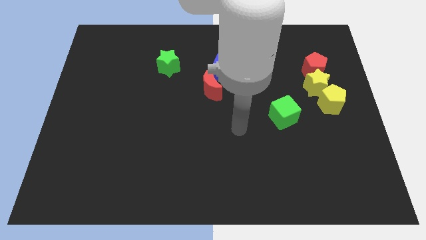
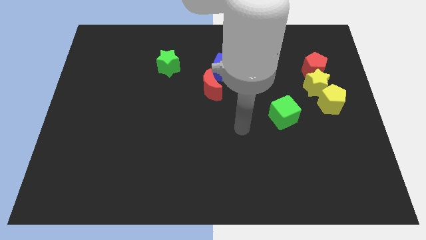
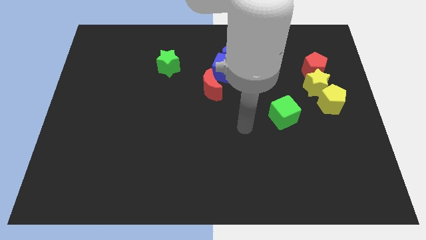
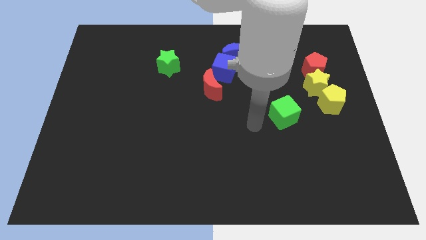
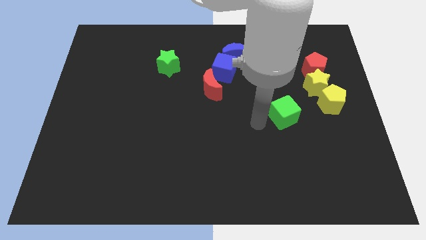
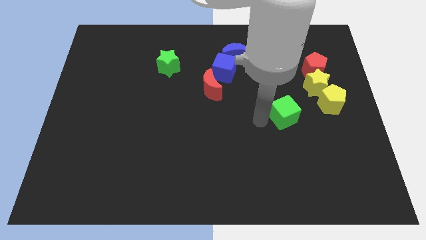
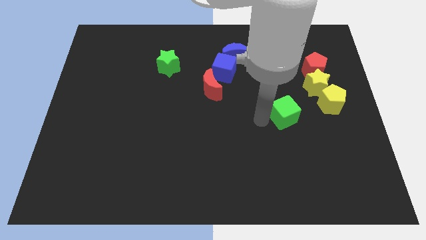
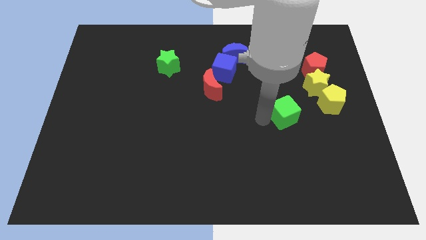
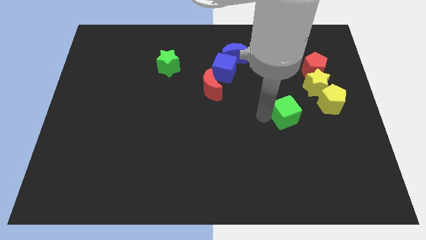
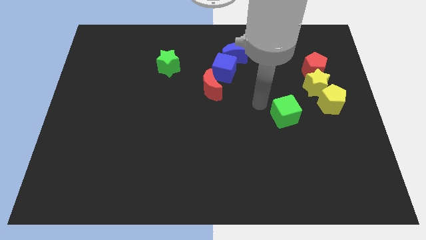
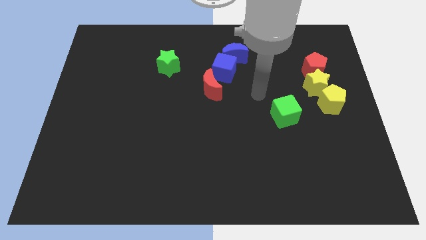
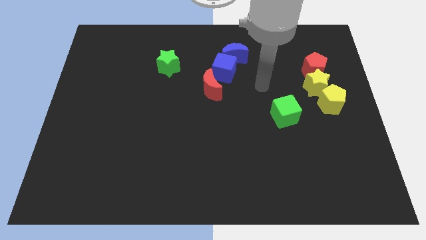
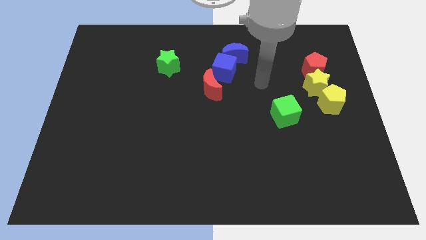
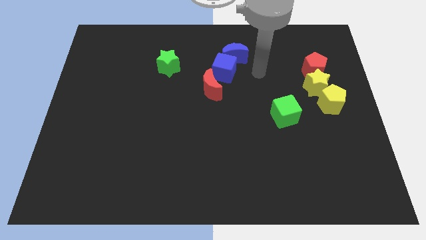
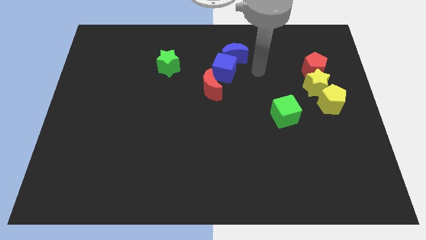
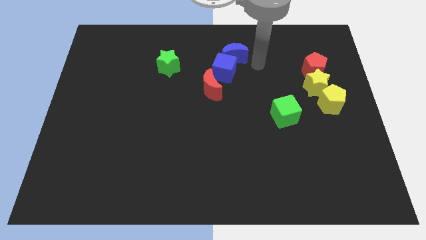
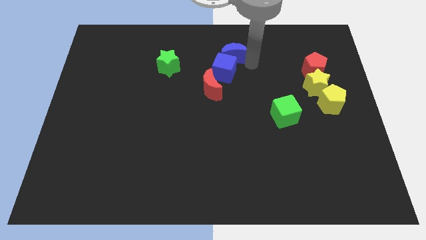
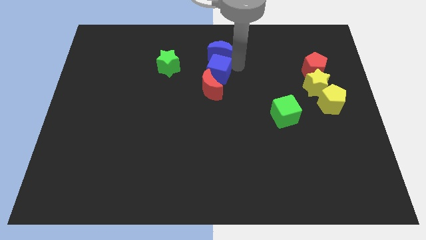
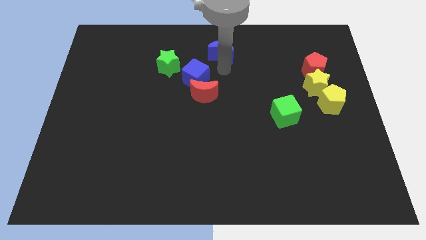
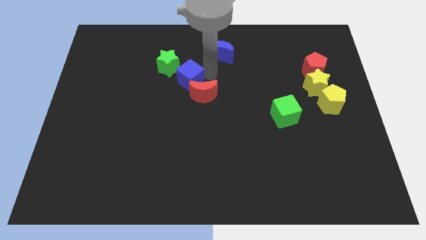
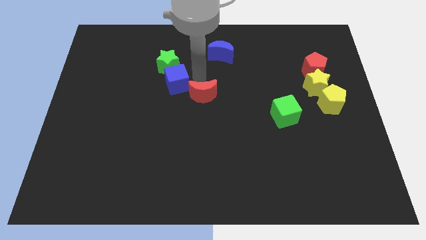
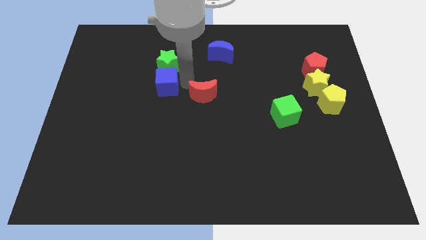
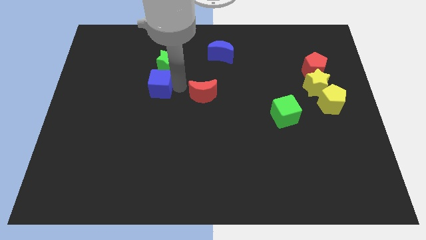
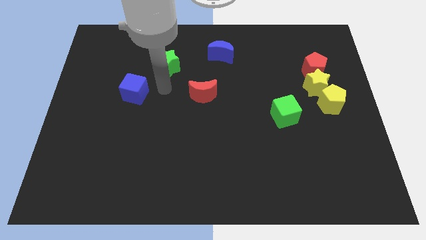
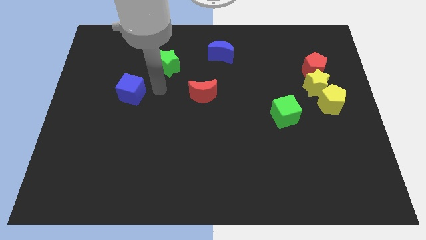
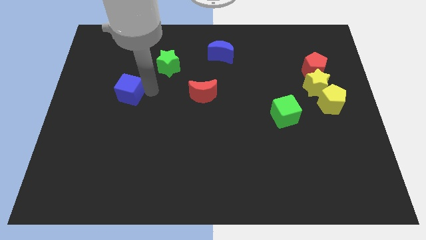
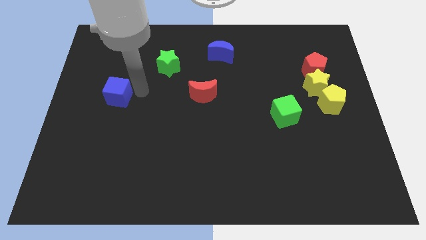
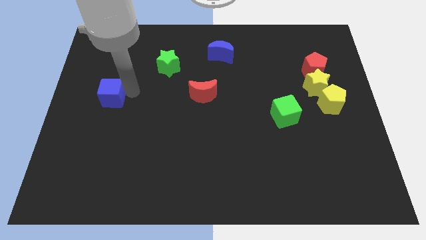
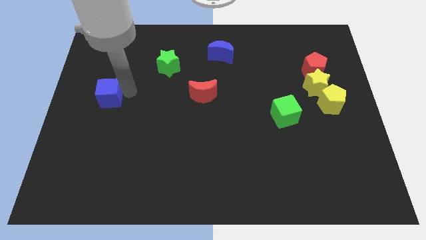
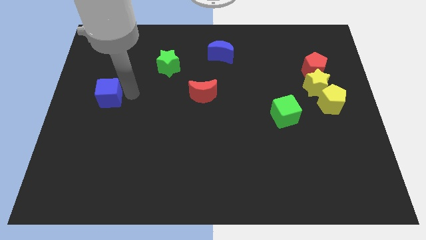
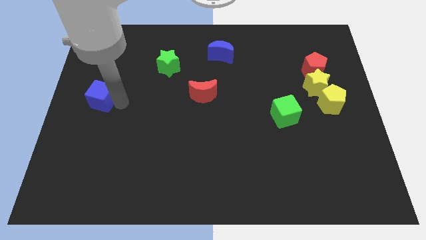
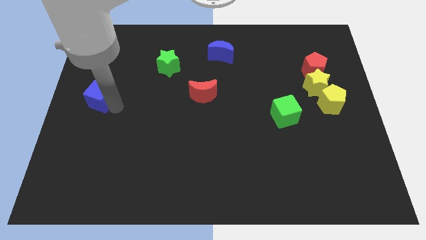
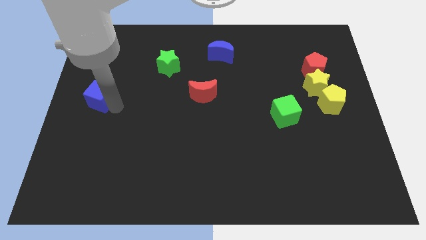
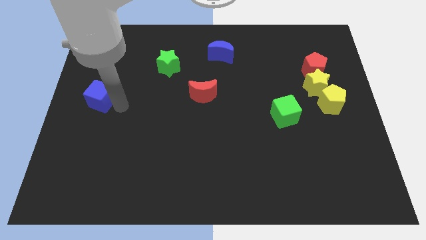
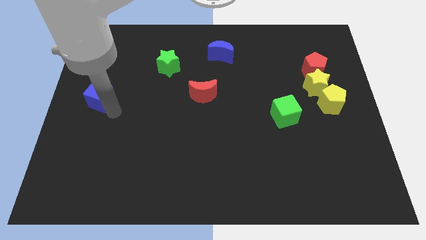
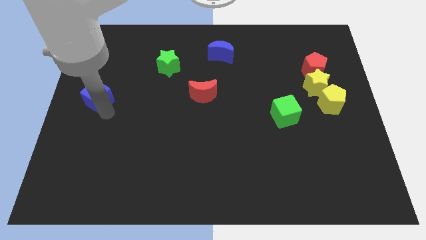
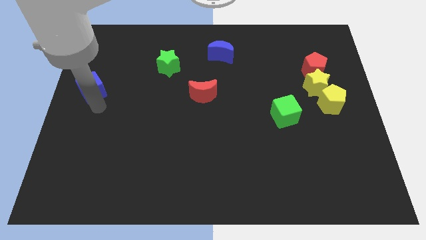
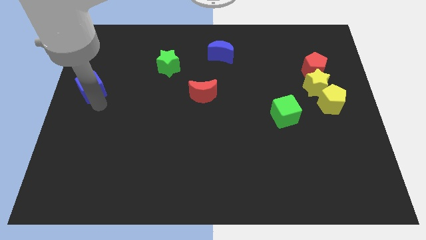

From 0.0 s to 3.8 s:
separate blue cube from the blue moon and red moon

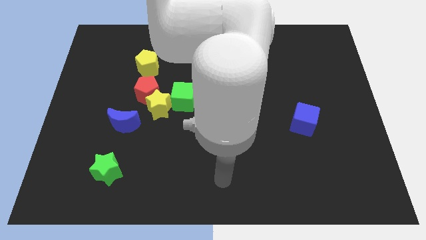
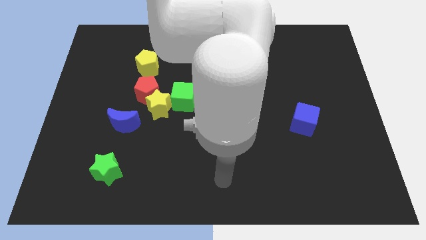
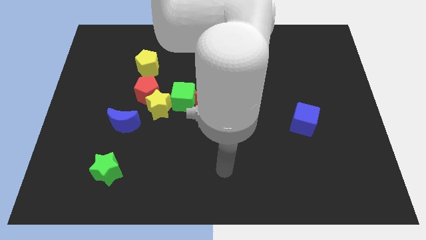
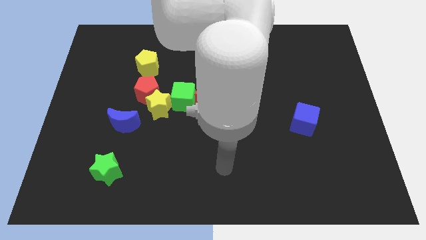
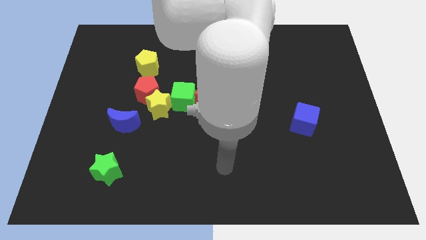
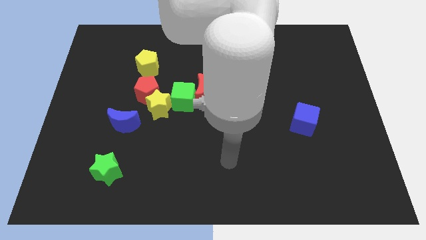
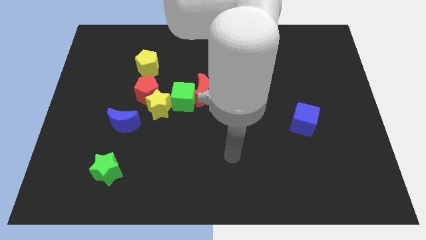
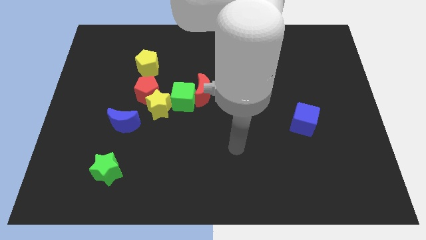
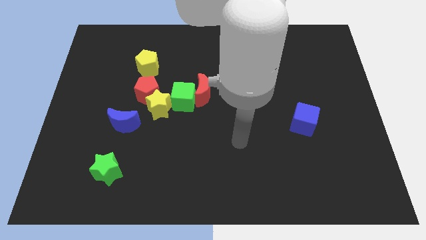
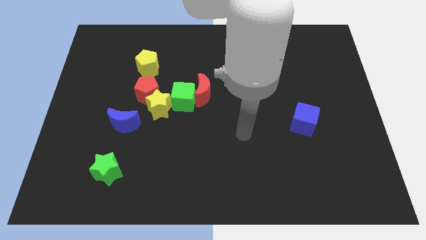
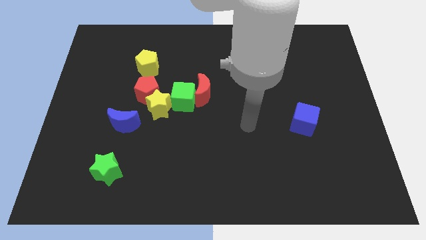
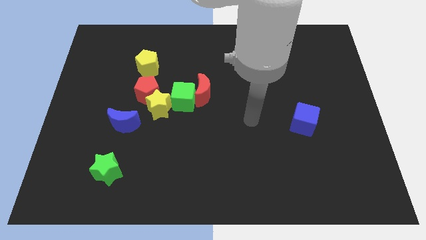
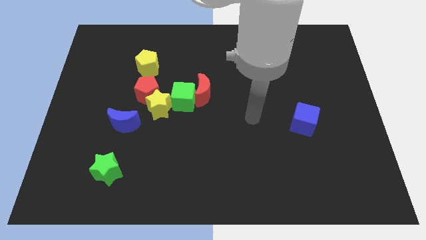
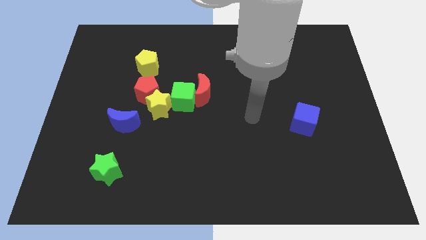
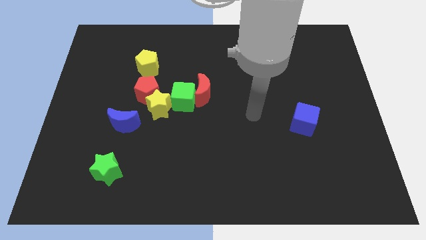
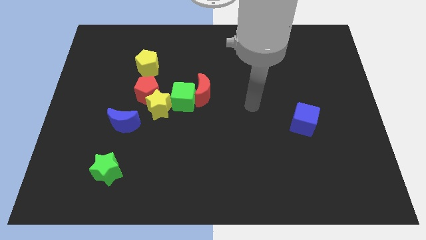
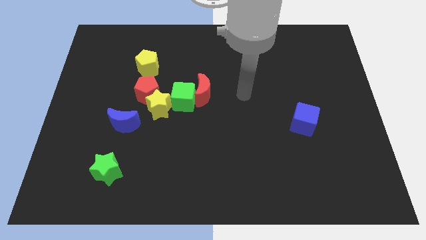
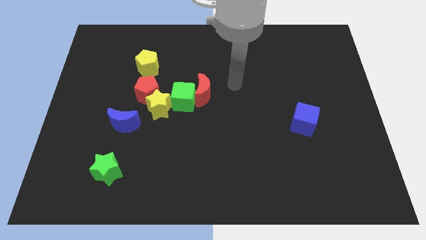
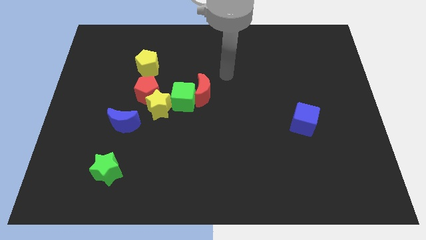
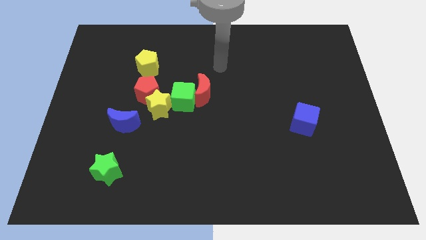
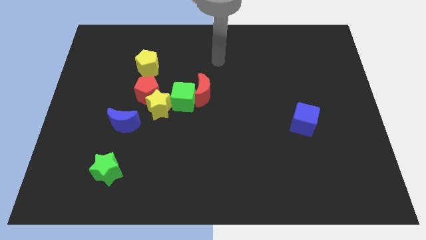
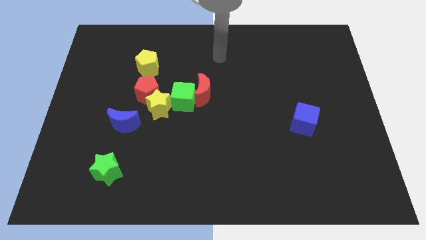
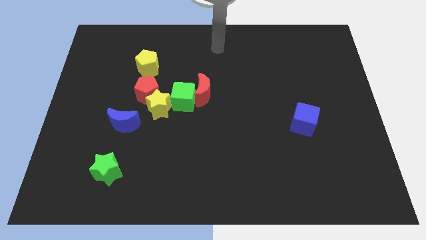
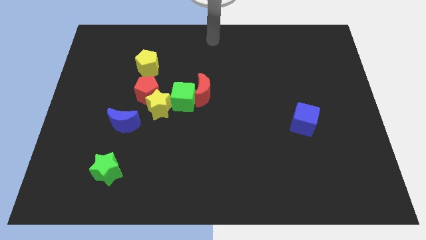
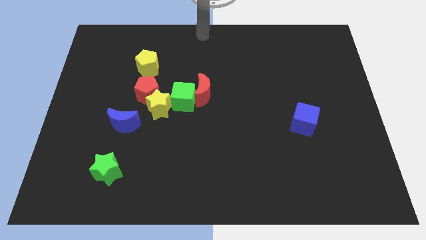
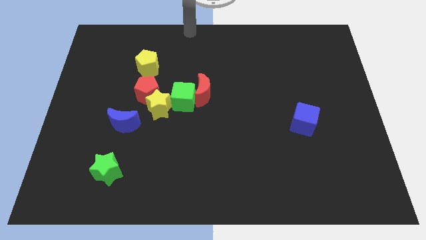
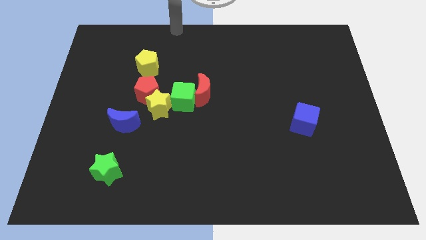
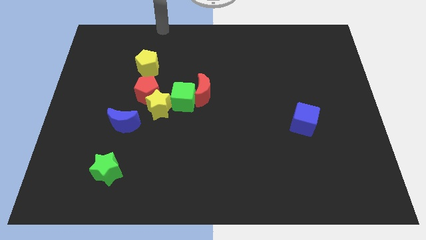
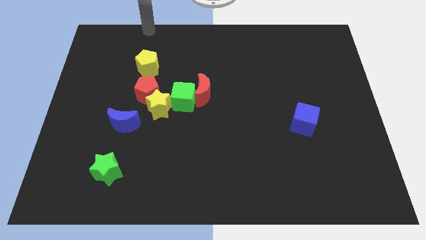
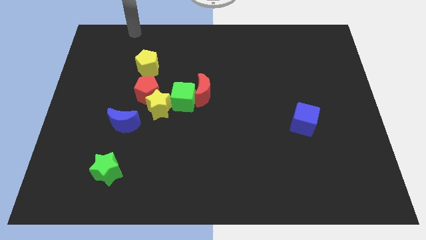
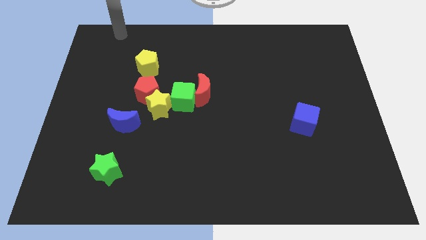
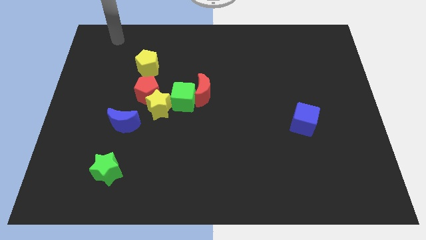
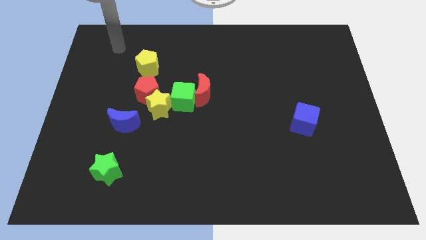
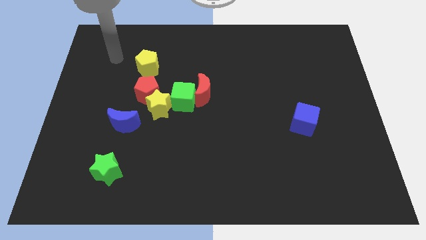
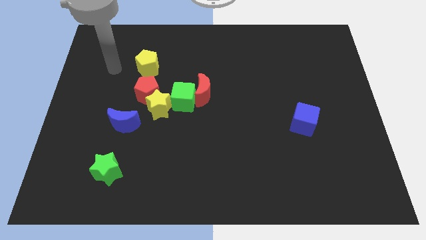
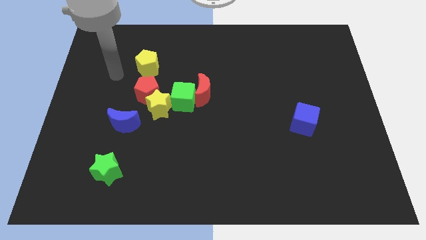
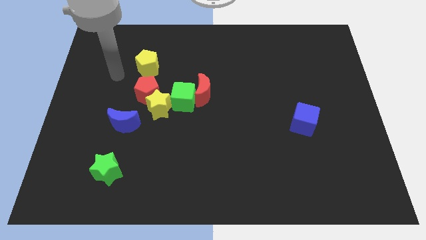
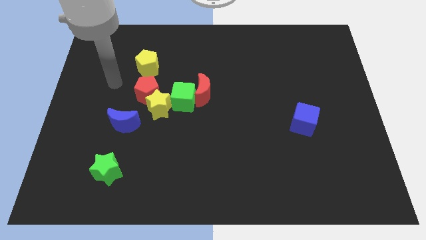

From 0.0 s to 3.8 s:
put your hand to the left of the red pentagon

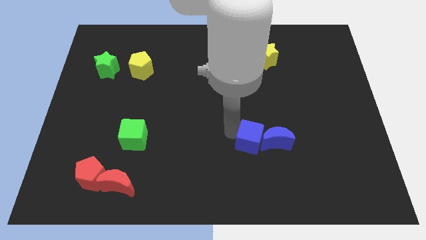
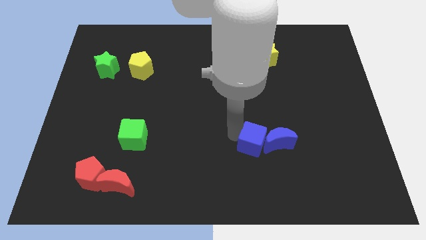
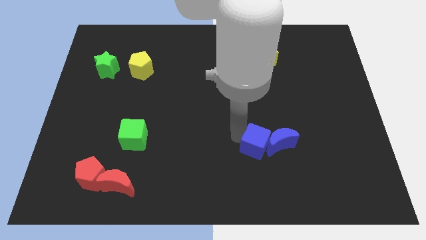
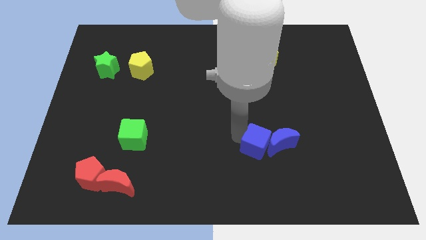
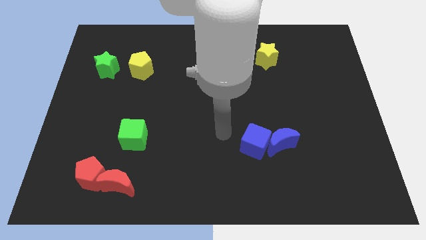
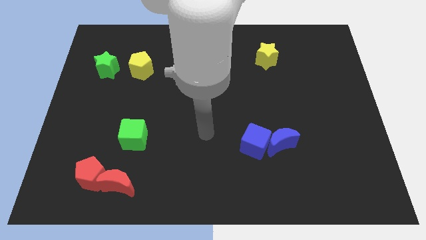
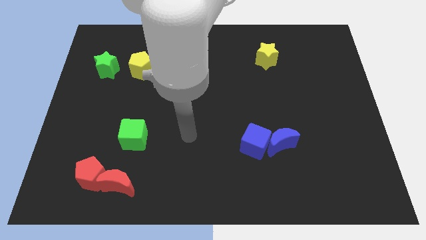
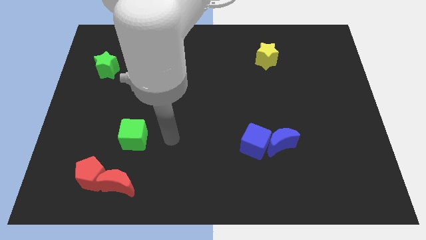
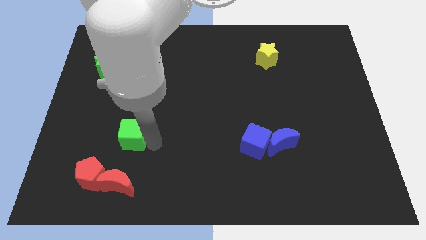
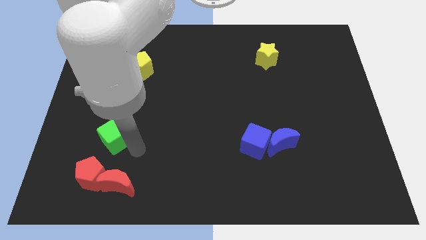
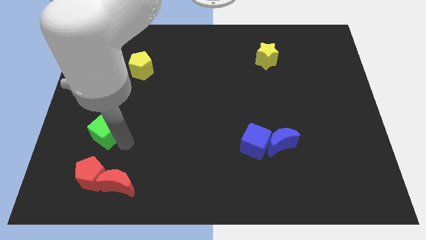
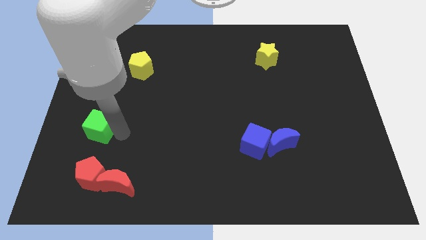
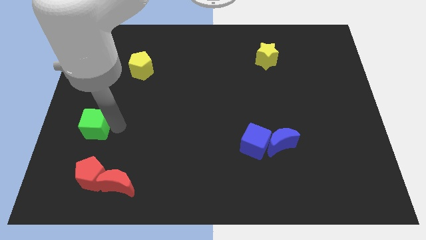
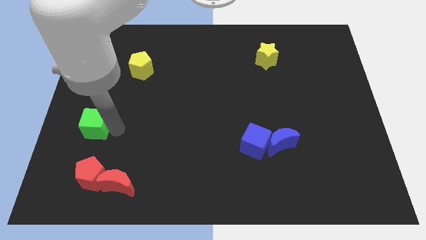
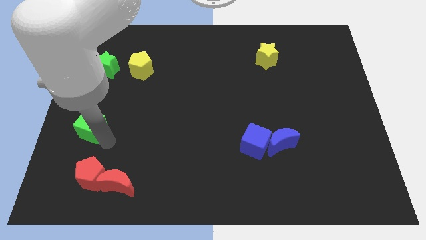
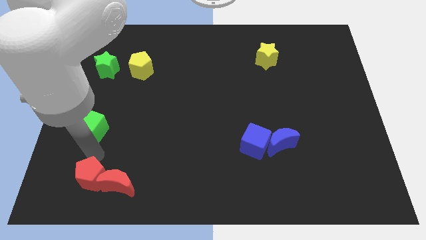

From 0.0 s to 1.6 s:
point your arm above red pentagon
